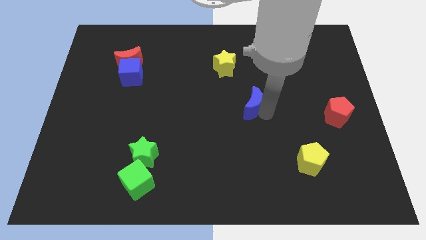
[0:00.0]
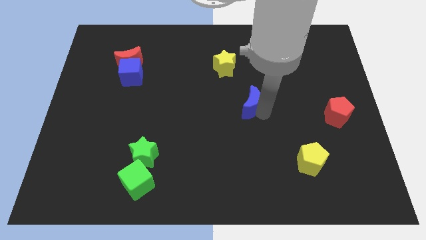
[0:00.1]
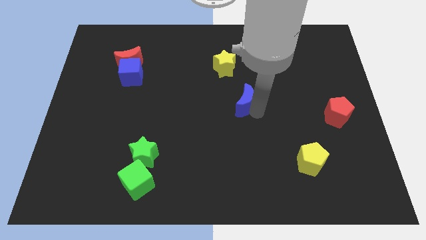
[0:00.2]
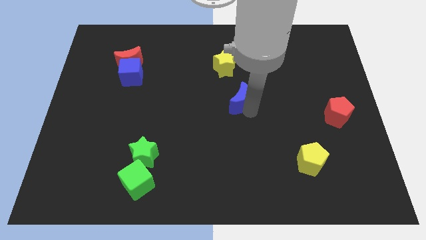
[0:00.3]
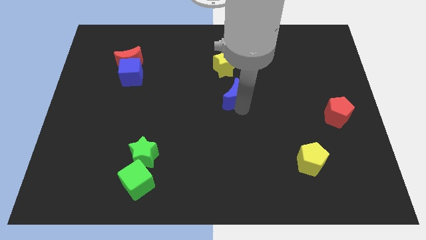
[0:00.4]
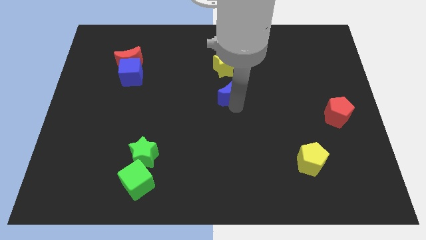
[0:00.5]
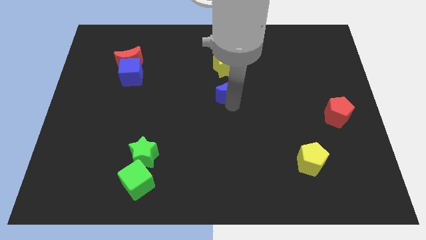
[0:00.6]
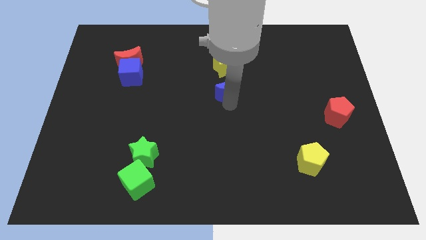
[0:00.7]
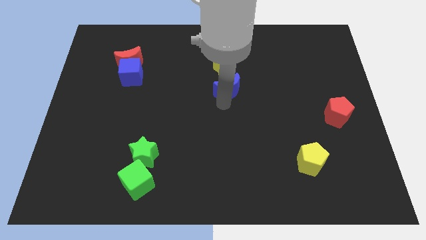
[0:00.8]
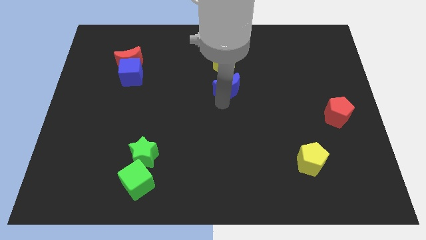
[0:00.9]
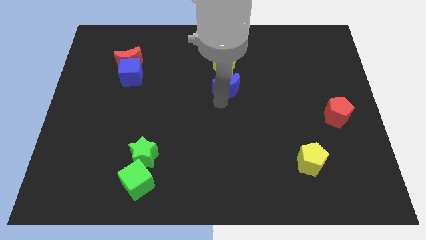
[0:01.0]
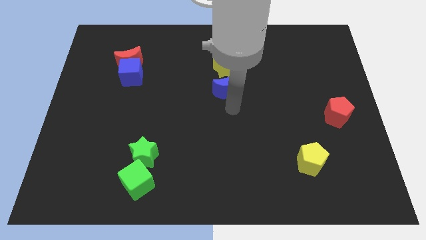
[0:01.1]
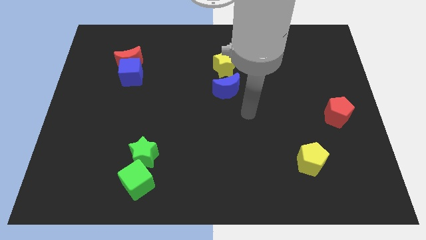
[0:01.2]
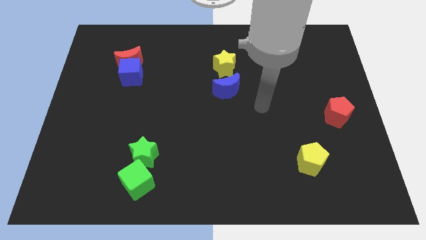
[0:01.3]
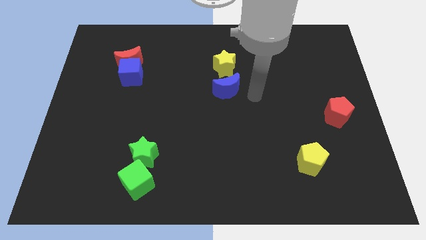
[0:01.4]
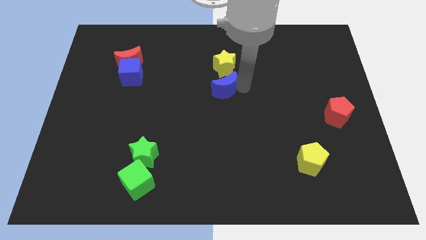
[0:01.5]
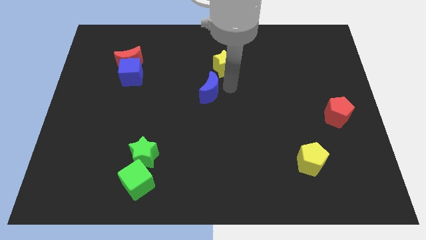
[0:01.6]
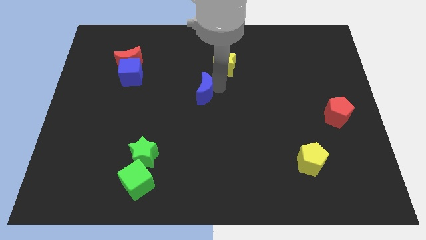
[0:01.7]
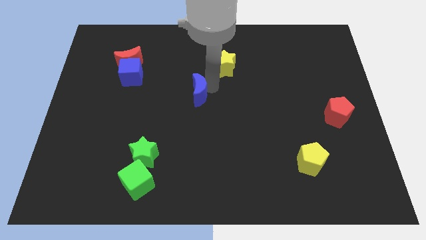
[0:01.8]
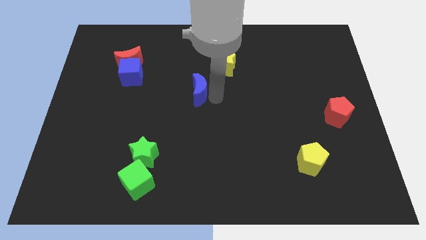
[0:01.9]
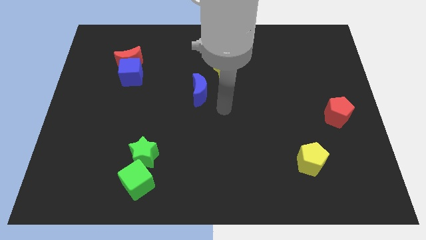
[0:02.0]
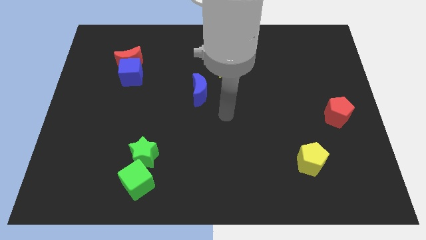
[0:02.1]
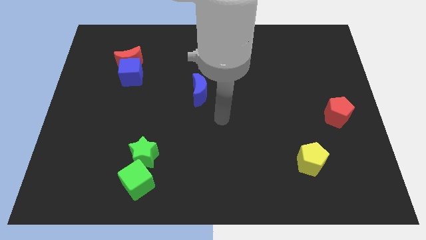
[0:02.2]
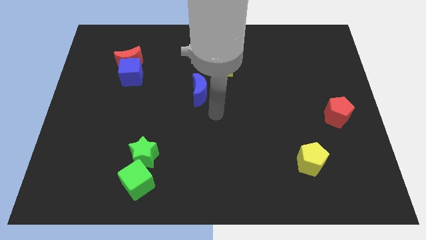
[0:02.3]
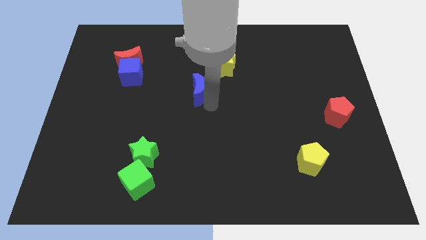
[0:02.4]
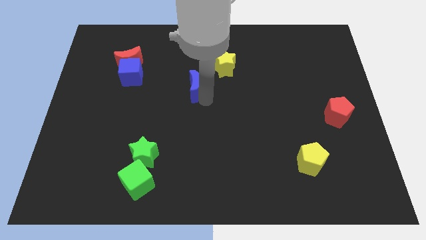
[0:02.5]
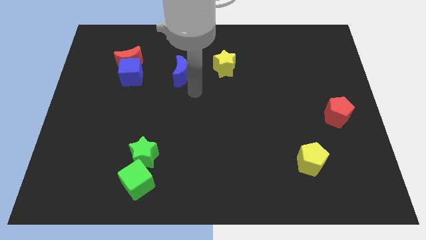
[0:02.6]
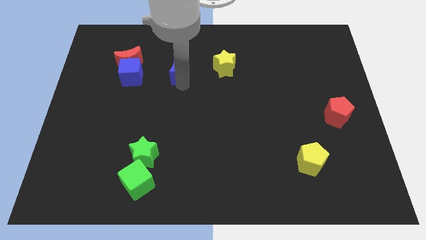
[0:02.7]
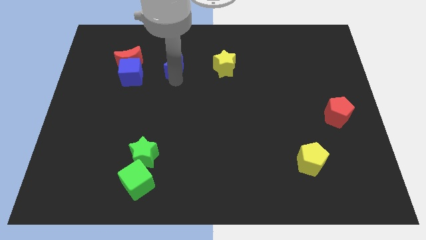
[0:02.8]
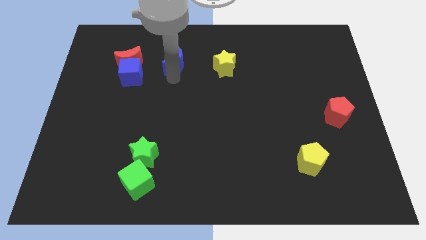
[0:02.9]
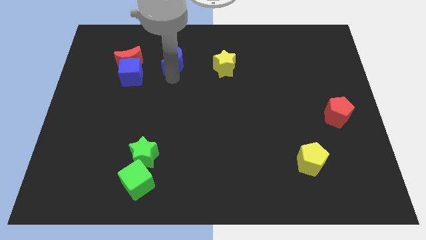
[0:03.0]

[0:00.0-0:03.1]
place the blue moon in between the yellow star and blue cube

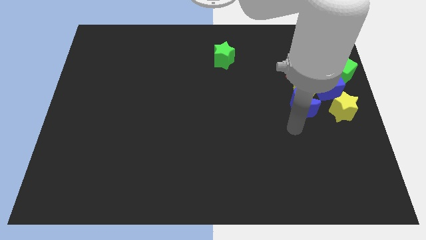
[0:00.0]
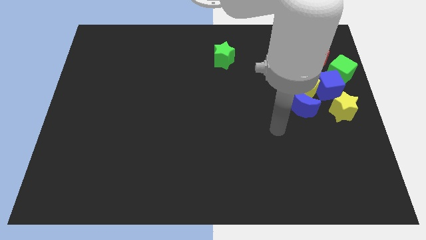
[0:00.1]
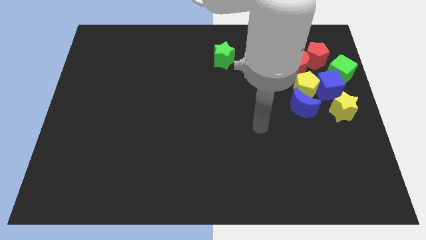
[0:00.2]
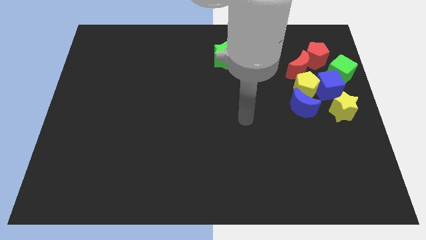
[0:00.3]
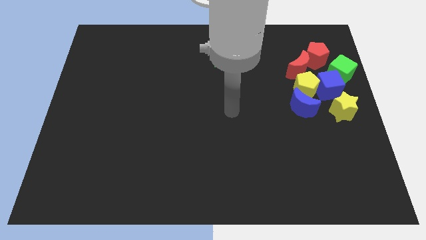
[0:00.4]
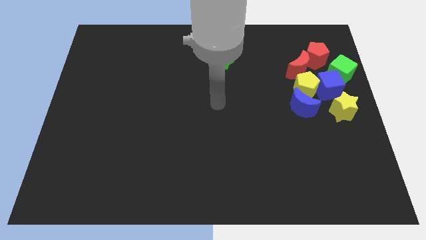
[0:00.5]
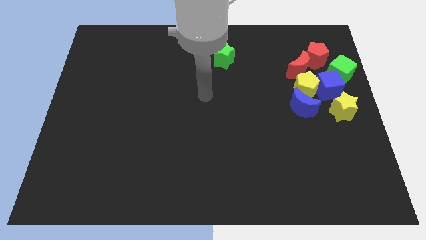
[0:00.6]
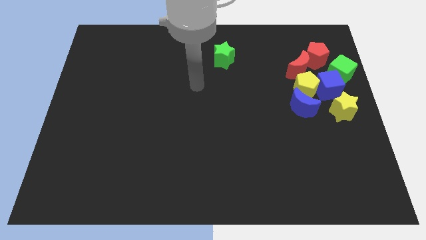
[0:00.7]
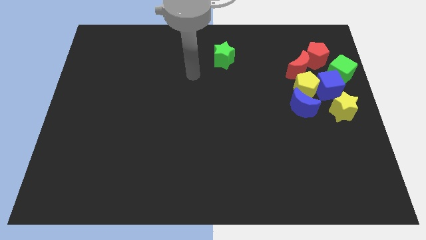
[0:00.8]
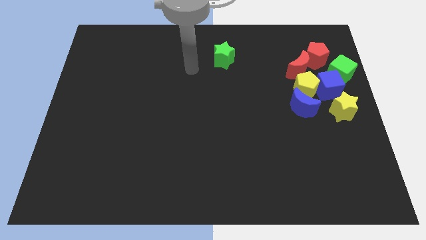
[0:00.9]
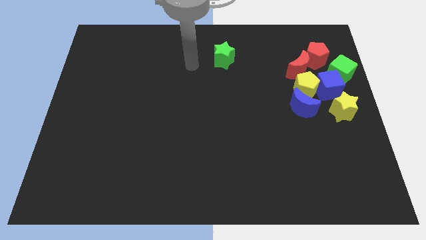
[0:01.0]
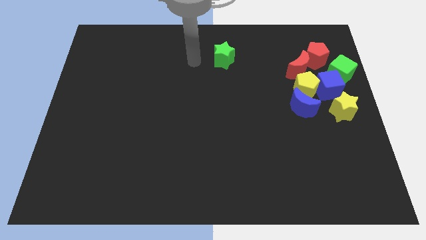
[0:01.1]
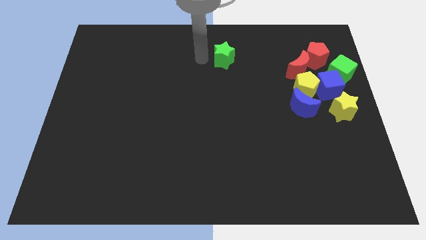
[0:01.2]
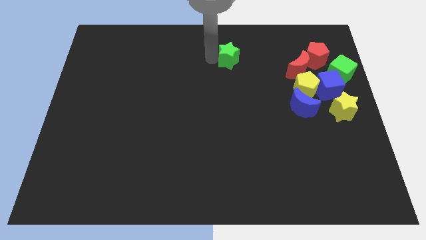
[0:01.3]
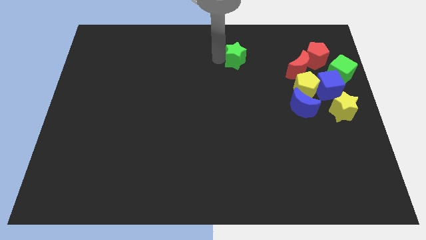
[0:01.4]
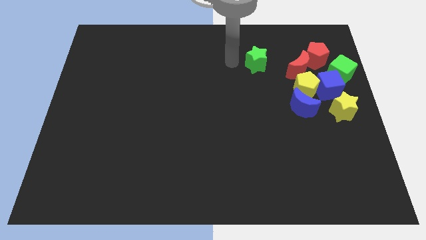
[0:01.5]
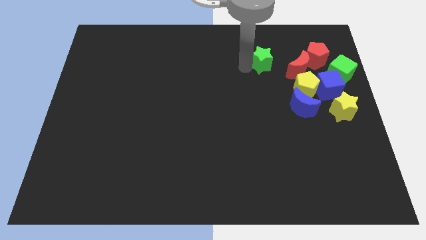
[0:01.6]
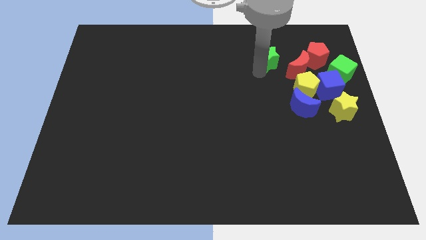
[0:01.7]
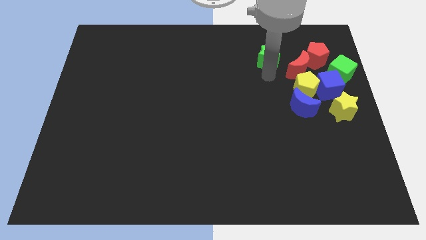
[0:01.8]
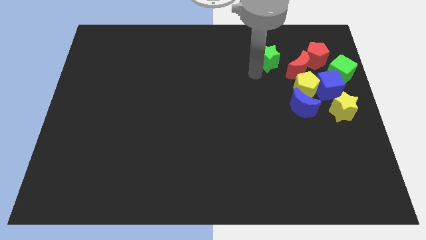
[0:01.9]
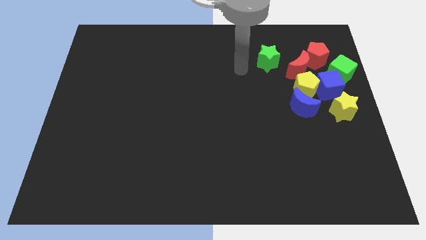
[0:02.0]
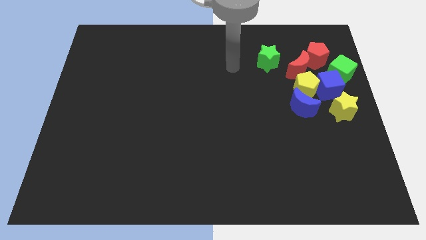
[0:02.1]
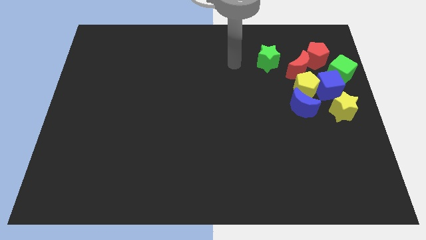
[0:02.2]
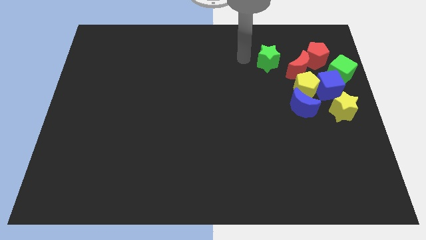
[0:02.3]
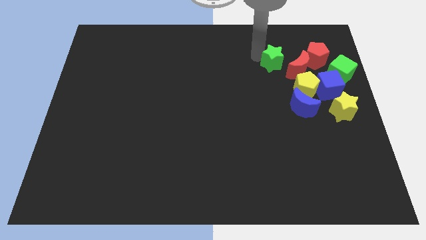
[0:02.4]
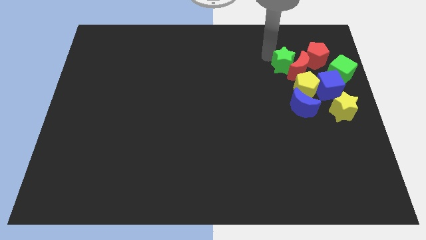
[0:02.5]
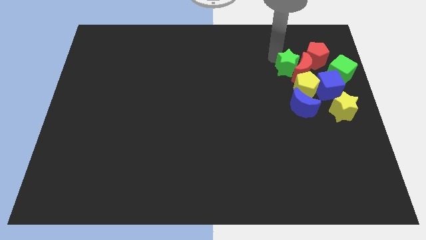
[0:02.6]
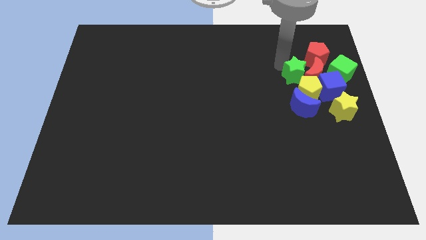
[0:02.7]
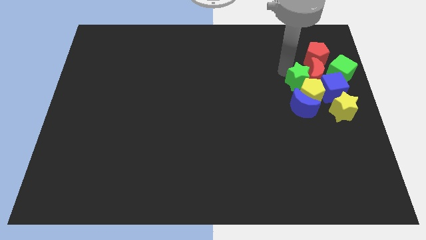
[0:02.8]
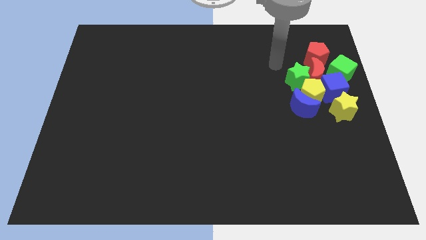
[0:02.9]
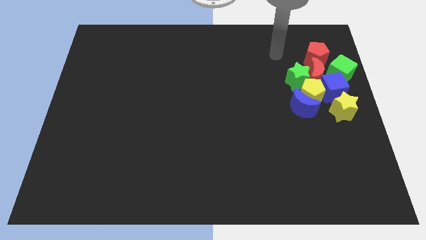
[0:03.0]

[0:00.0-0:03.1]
move the green star to the group of blocks

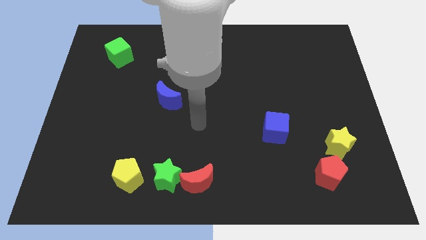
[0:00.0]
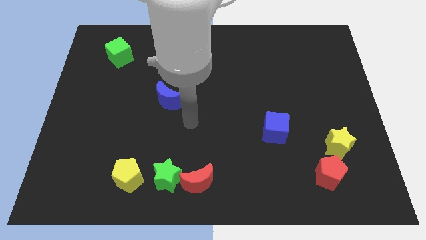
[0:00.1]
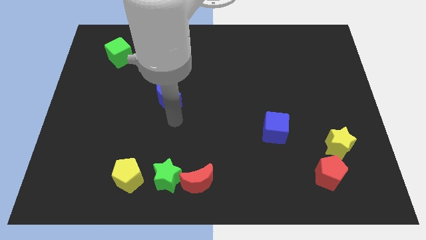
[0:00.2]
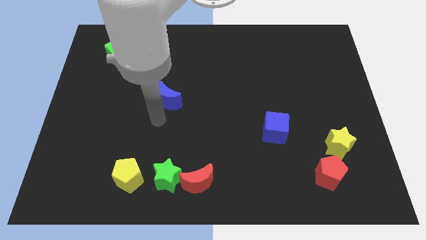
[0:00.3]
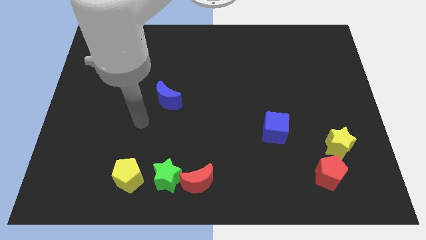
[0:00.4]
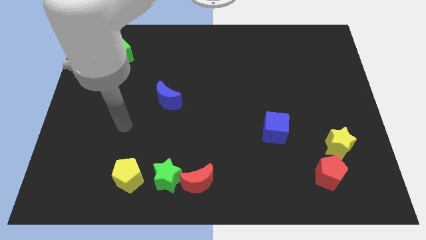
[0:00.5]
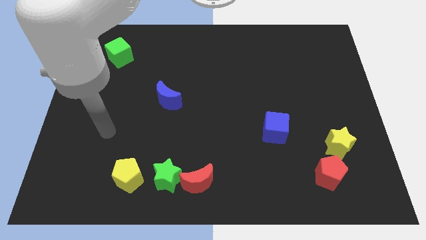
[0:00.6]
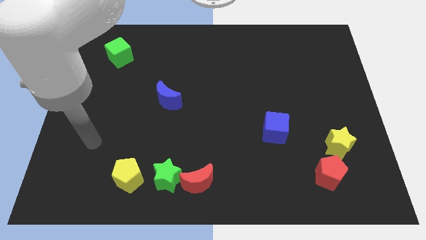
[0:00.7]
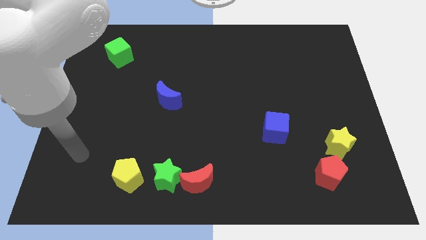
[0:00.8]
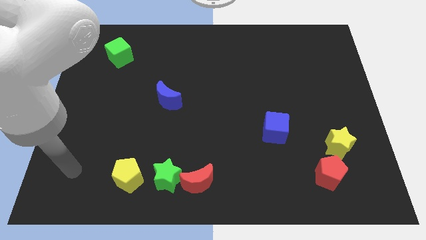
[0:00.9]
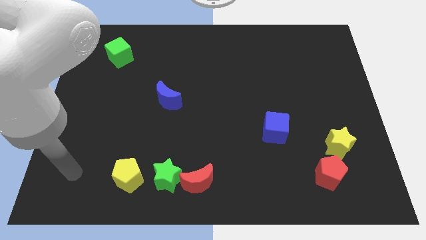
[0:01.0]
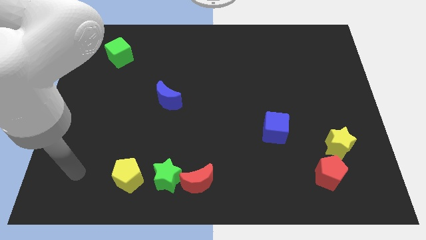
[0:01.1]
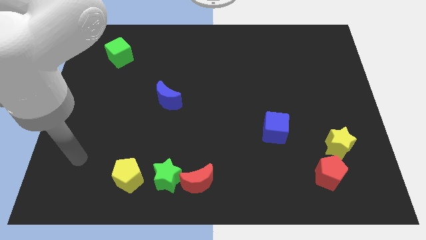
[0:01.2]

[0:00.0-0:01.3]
move your hand towards the bottom left

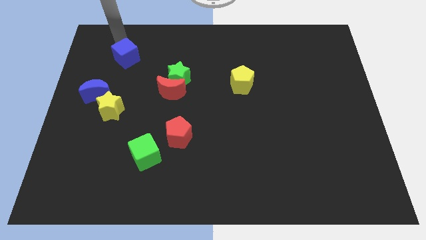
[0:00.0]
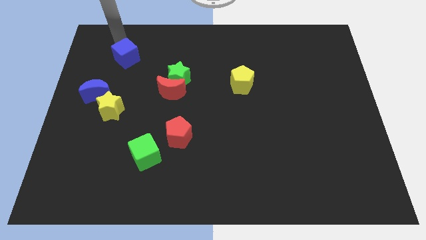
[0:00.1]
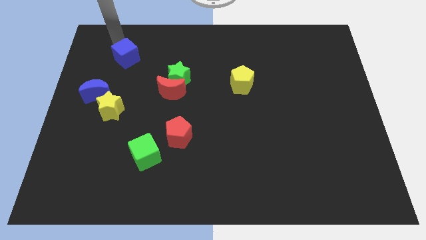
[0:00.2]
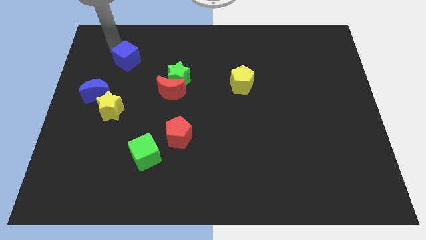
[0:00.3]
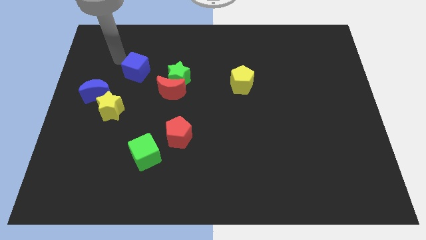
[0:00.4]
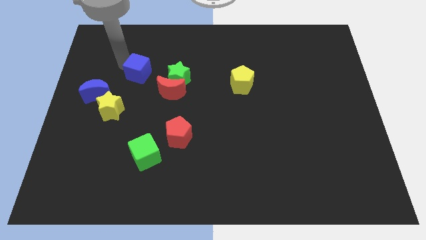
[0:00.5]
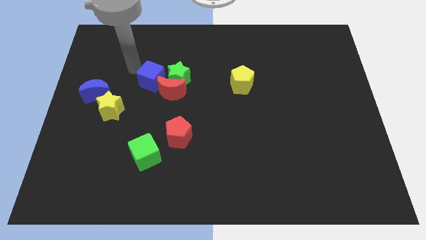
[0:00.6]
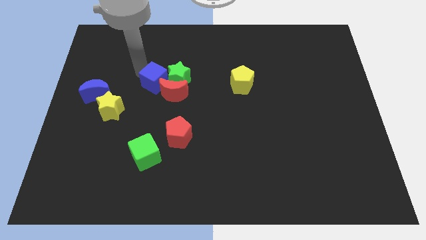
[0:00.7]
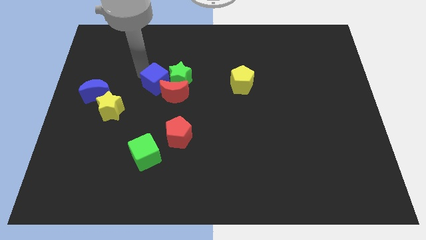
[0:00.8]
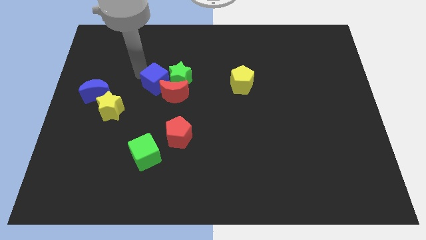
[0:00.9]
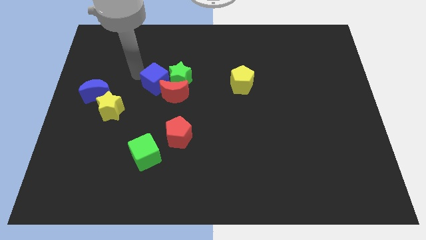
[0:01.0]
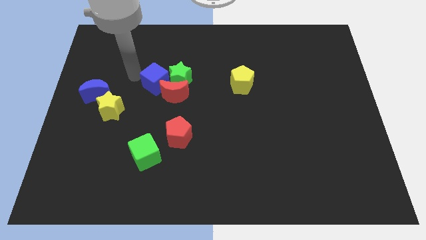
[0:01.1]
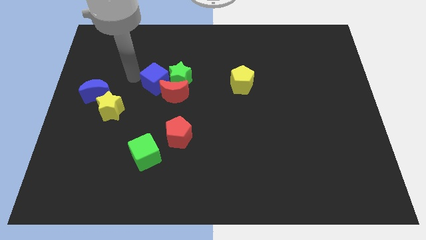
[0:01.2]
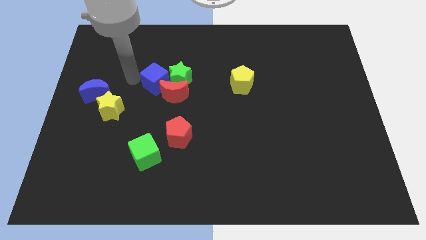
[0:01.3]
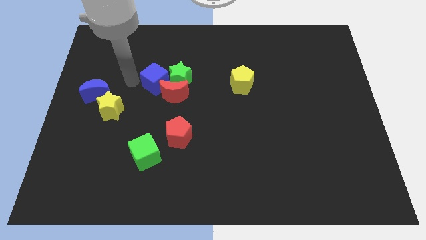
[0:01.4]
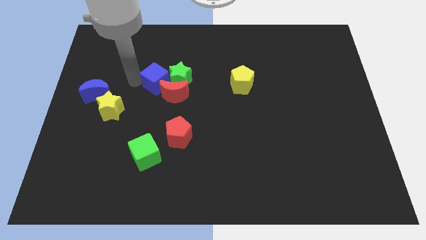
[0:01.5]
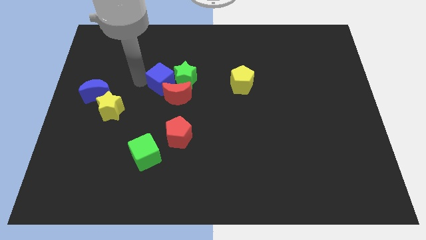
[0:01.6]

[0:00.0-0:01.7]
push the blue cube into the green star and the red moon
